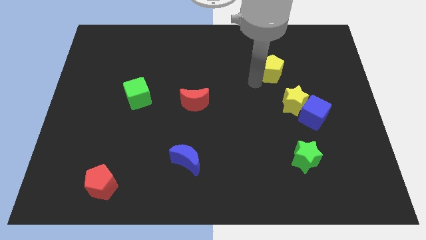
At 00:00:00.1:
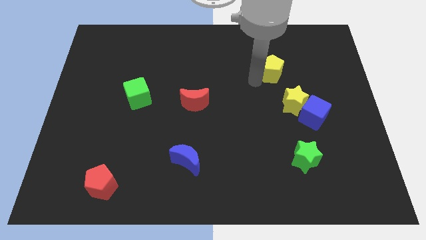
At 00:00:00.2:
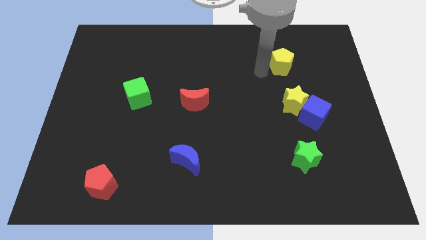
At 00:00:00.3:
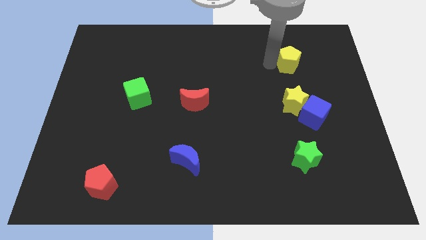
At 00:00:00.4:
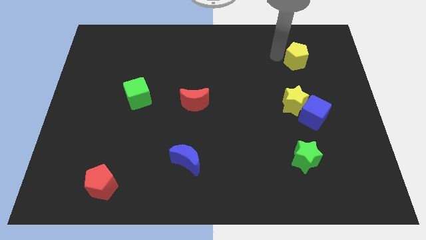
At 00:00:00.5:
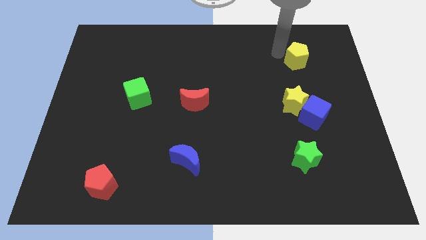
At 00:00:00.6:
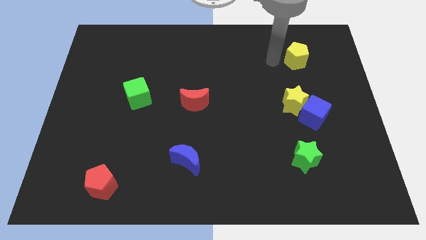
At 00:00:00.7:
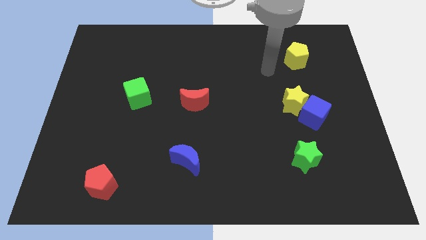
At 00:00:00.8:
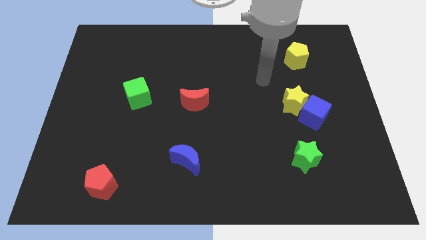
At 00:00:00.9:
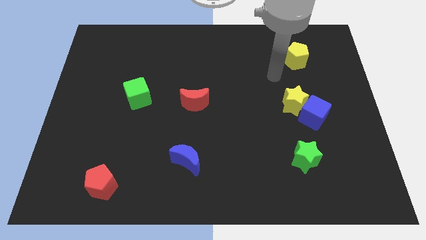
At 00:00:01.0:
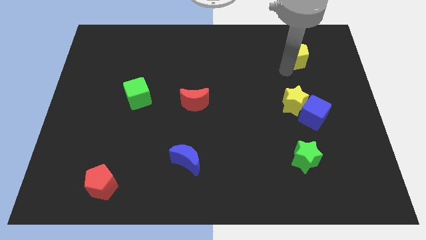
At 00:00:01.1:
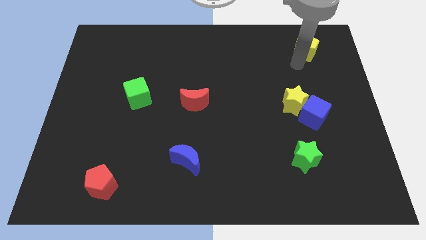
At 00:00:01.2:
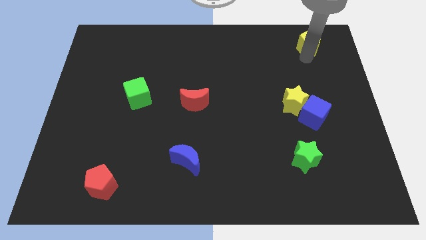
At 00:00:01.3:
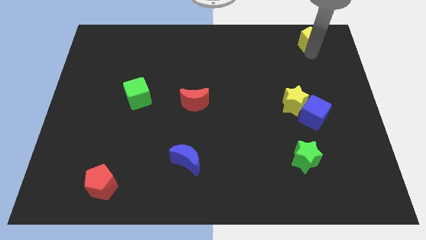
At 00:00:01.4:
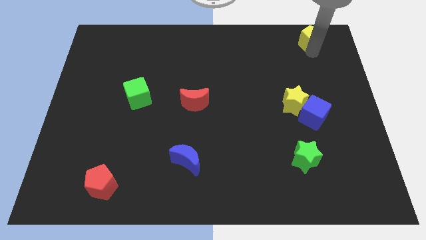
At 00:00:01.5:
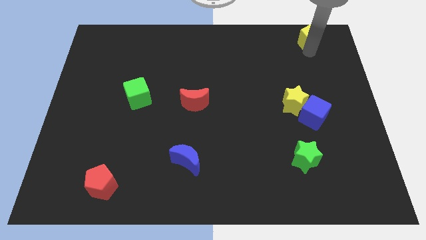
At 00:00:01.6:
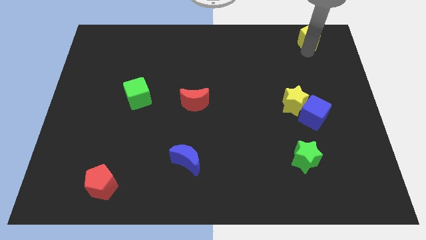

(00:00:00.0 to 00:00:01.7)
push the yellow pentagon to the top right of the board

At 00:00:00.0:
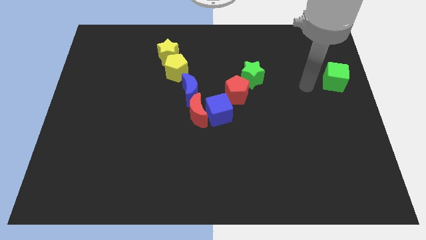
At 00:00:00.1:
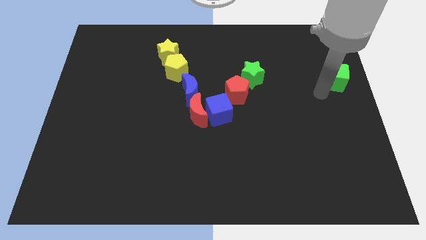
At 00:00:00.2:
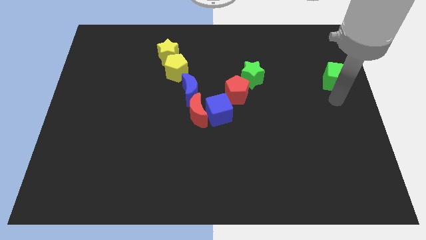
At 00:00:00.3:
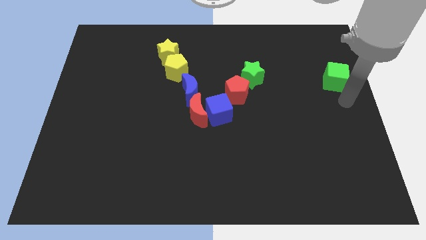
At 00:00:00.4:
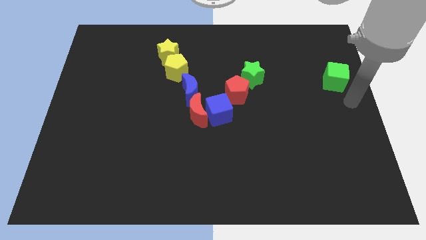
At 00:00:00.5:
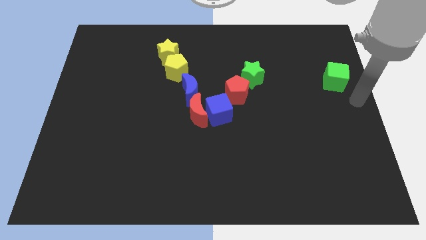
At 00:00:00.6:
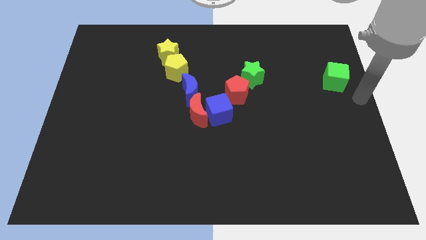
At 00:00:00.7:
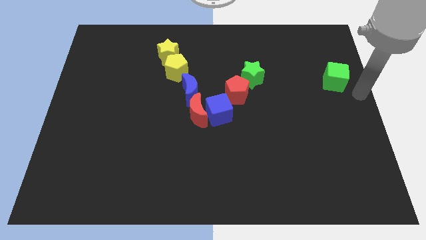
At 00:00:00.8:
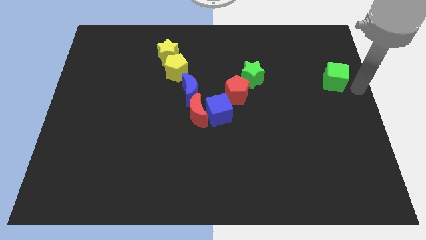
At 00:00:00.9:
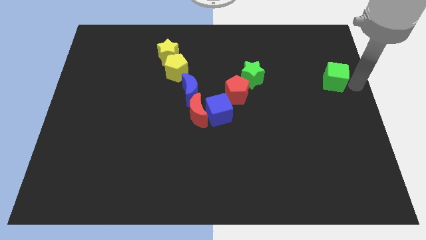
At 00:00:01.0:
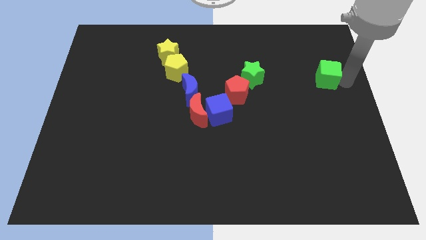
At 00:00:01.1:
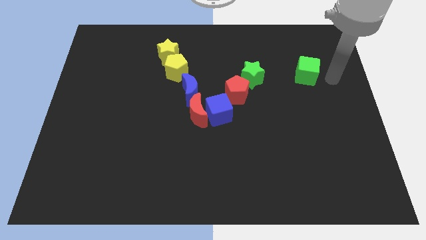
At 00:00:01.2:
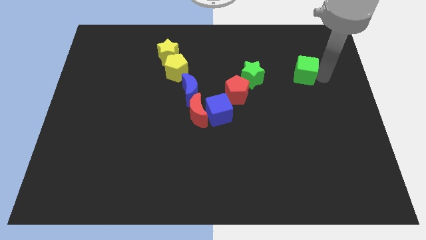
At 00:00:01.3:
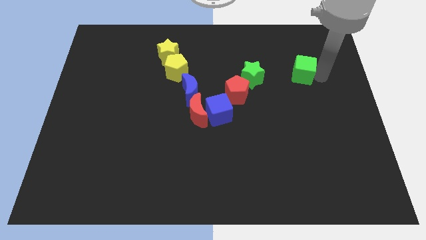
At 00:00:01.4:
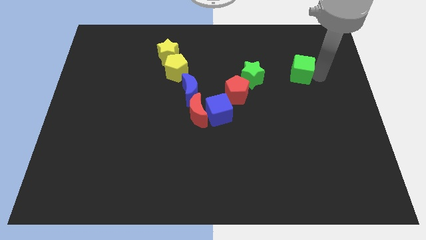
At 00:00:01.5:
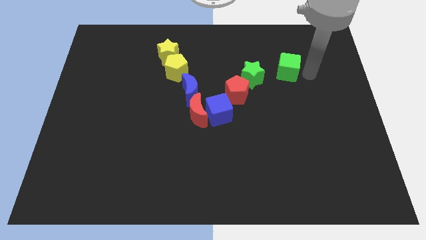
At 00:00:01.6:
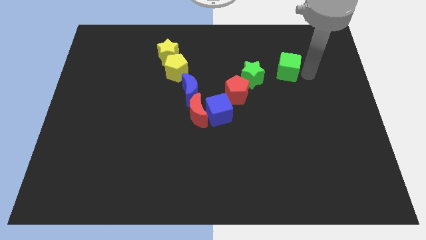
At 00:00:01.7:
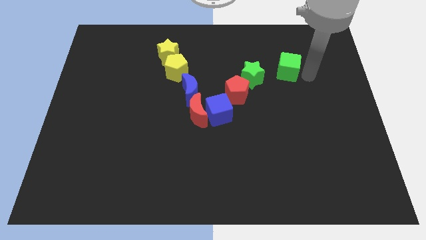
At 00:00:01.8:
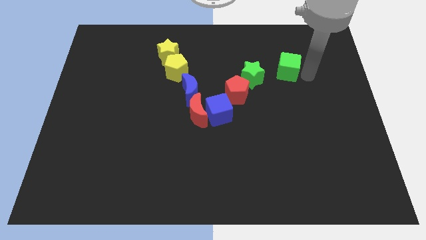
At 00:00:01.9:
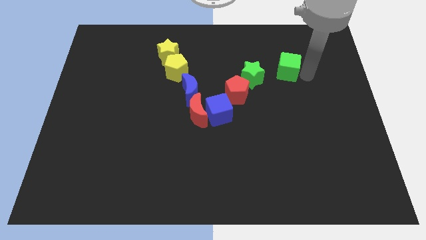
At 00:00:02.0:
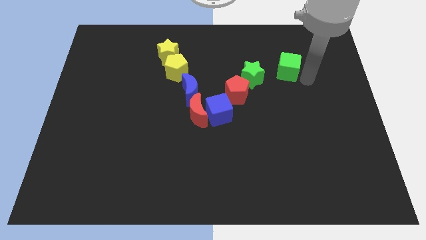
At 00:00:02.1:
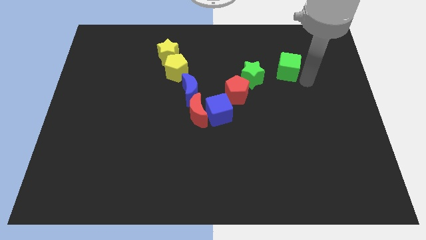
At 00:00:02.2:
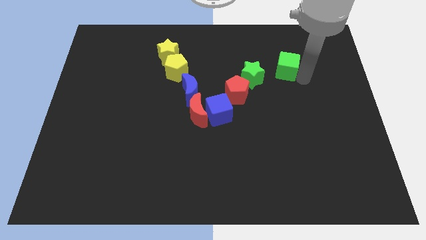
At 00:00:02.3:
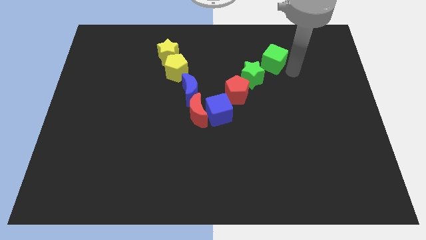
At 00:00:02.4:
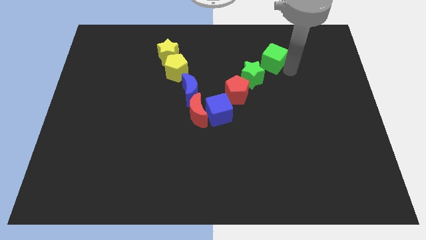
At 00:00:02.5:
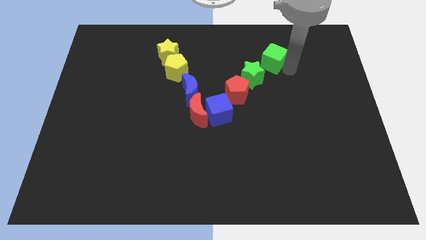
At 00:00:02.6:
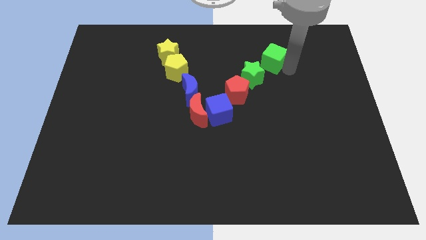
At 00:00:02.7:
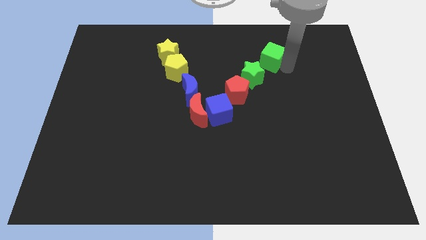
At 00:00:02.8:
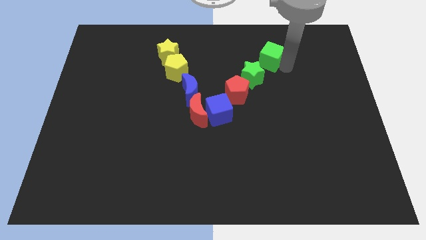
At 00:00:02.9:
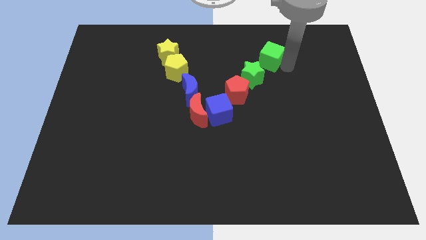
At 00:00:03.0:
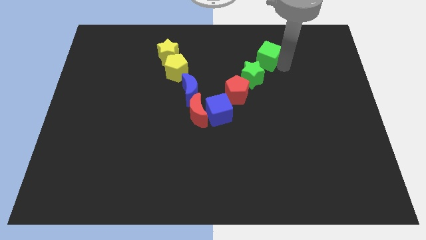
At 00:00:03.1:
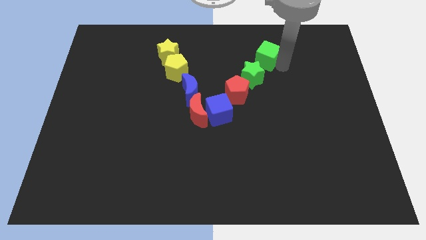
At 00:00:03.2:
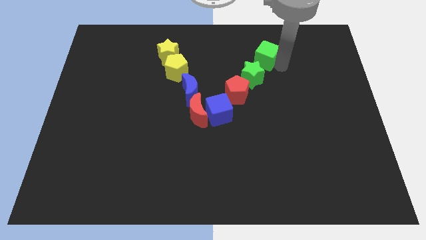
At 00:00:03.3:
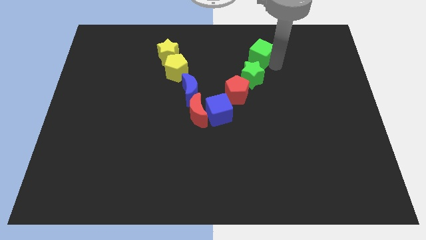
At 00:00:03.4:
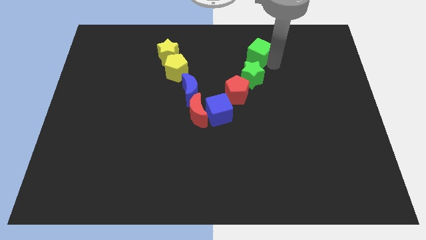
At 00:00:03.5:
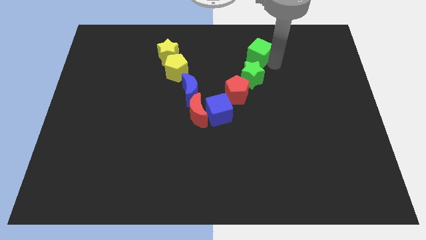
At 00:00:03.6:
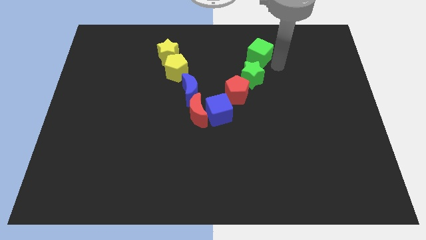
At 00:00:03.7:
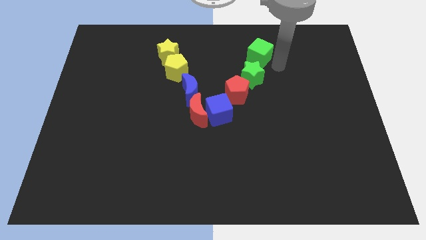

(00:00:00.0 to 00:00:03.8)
place the green cube to the top of the green star

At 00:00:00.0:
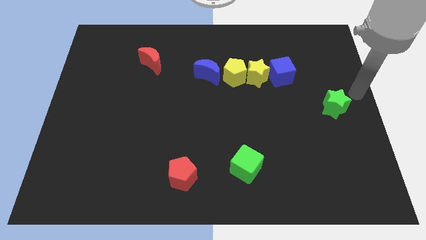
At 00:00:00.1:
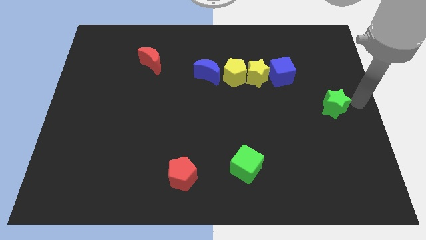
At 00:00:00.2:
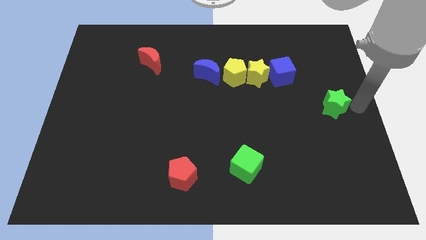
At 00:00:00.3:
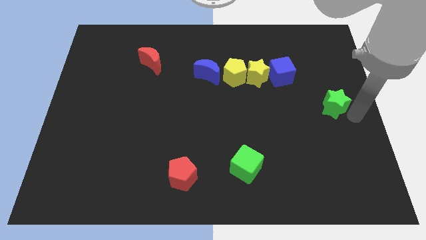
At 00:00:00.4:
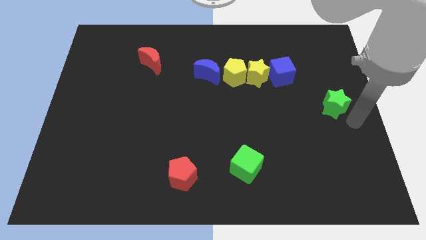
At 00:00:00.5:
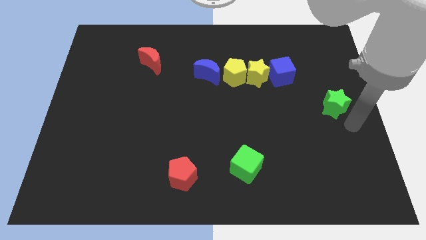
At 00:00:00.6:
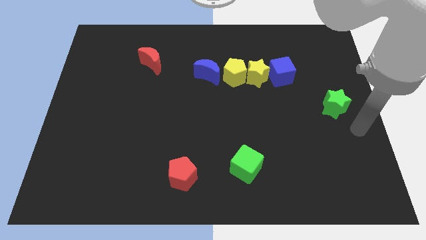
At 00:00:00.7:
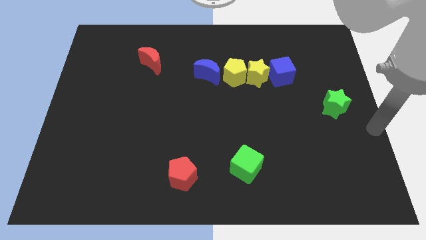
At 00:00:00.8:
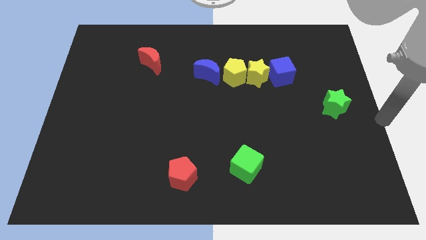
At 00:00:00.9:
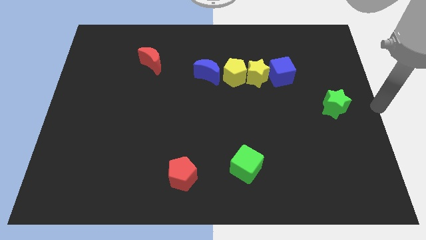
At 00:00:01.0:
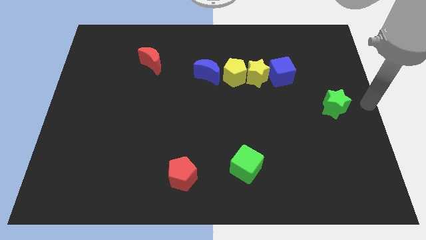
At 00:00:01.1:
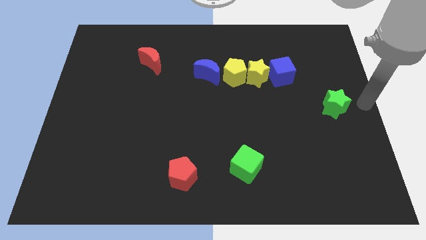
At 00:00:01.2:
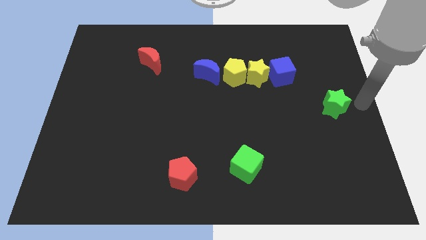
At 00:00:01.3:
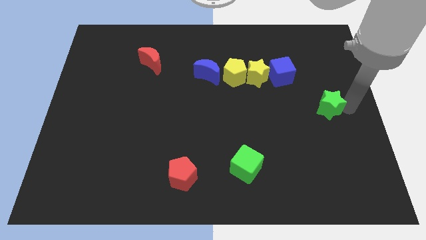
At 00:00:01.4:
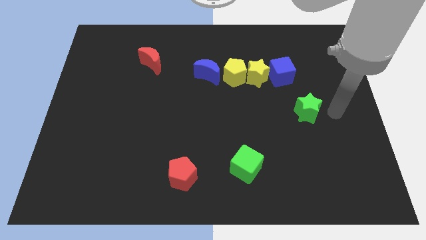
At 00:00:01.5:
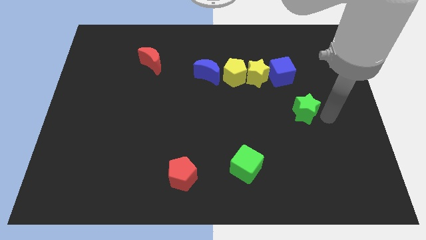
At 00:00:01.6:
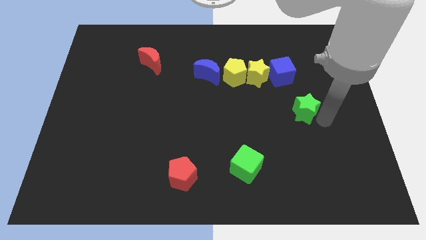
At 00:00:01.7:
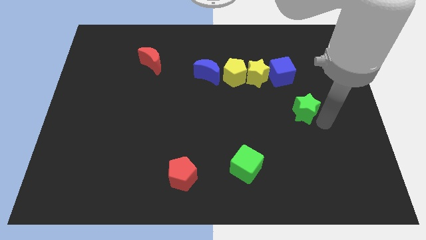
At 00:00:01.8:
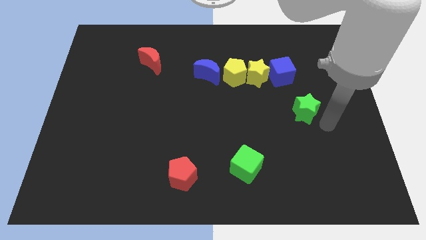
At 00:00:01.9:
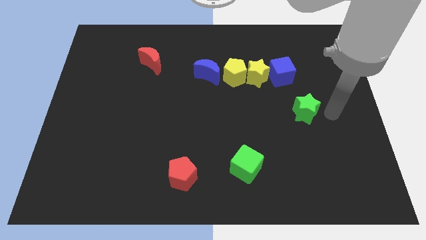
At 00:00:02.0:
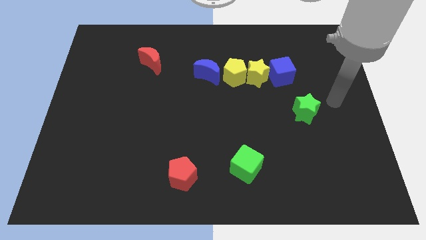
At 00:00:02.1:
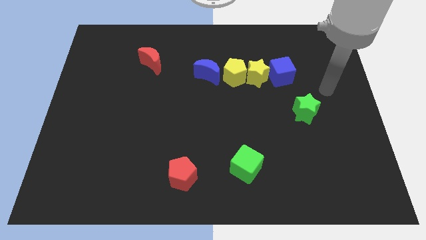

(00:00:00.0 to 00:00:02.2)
push the green star towards center of the board

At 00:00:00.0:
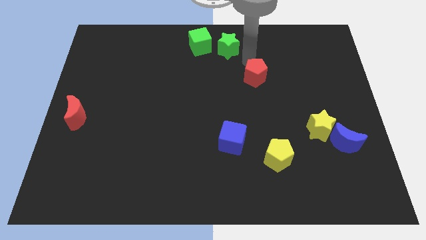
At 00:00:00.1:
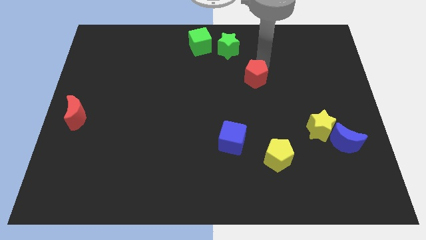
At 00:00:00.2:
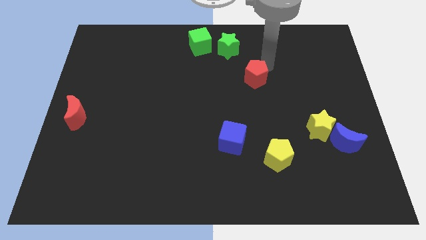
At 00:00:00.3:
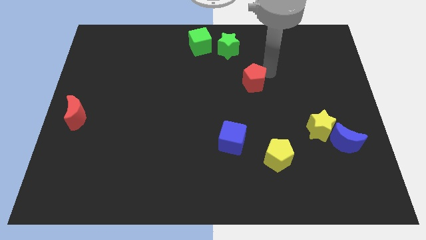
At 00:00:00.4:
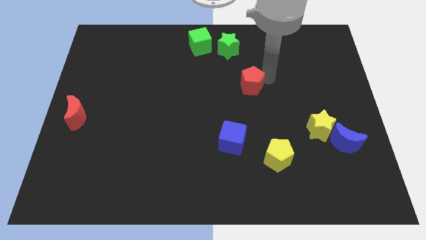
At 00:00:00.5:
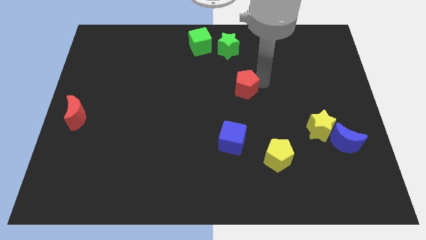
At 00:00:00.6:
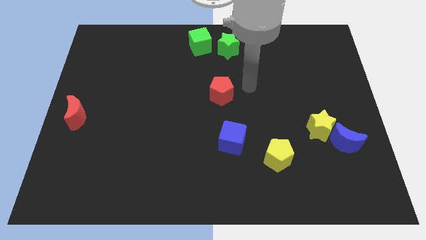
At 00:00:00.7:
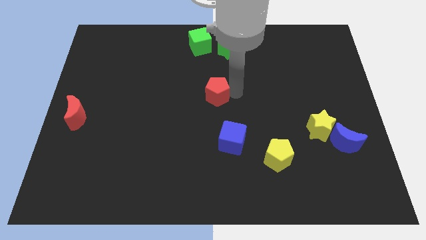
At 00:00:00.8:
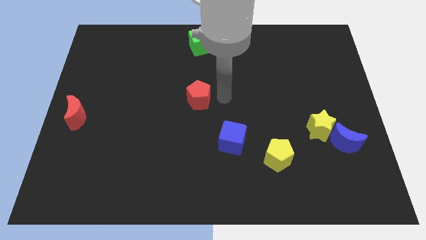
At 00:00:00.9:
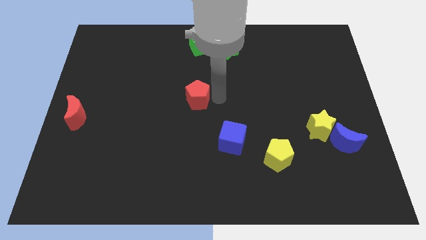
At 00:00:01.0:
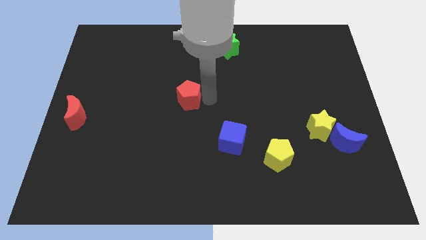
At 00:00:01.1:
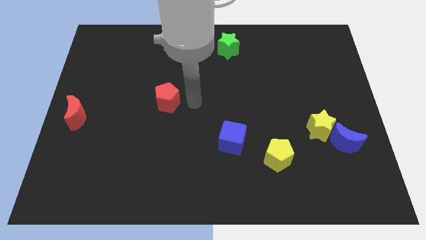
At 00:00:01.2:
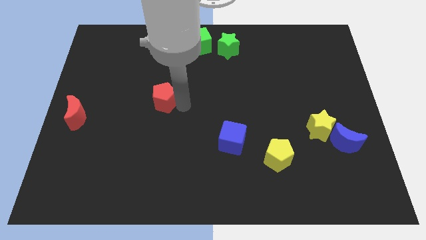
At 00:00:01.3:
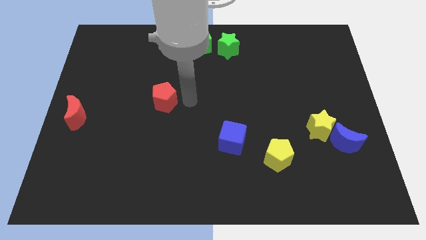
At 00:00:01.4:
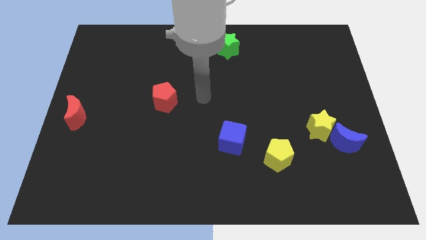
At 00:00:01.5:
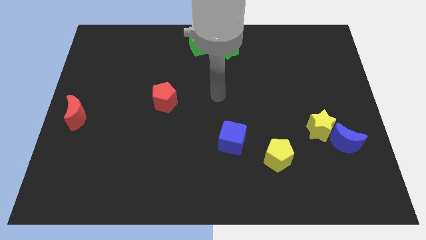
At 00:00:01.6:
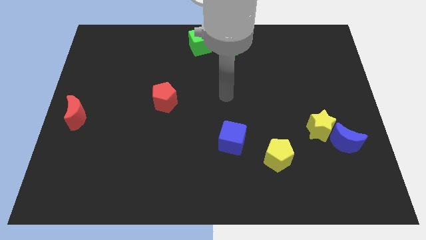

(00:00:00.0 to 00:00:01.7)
push the red pentagon towards the red crescent
